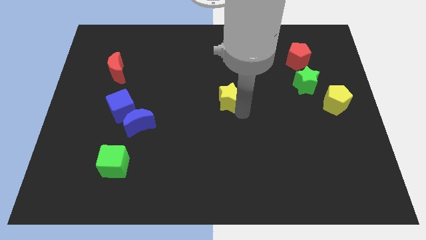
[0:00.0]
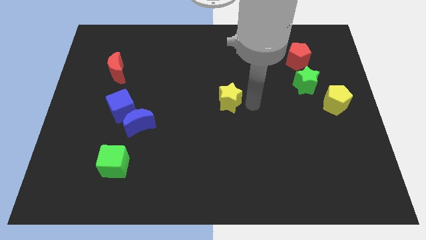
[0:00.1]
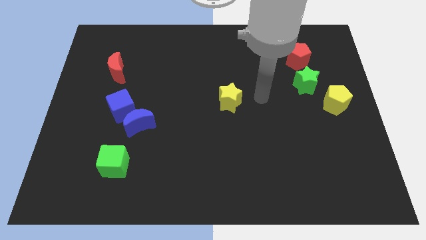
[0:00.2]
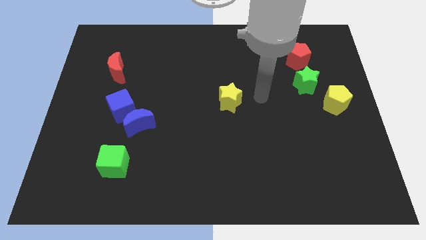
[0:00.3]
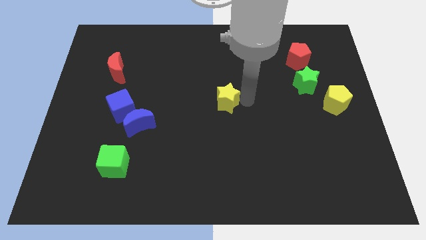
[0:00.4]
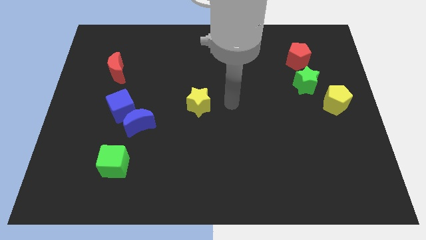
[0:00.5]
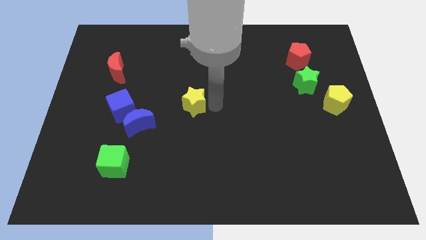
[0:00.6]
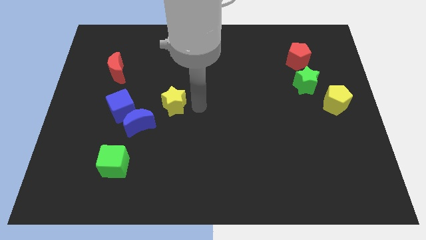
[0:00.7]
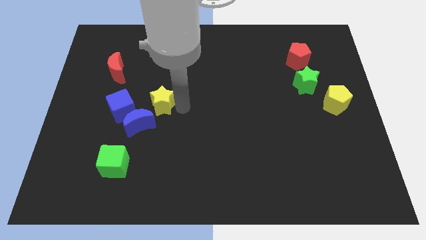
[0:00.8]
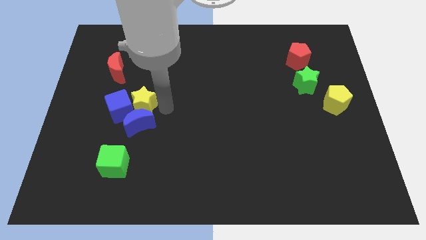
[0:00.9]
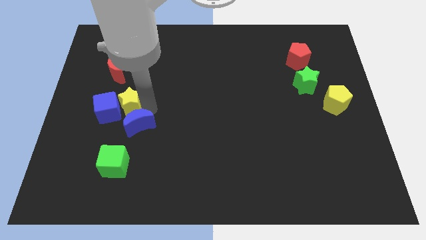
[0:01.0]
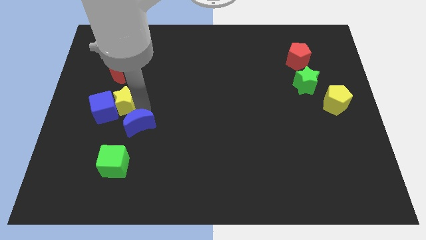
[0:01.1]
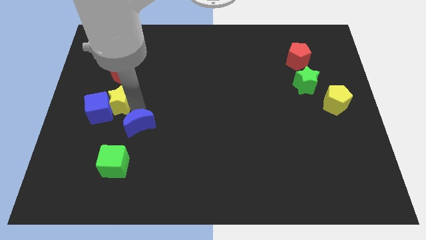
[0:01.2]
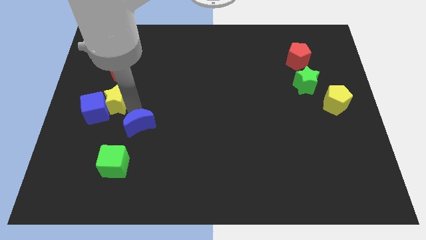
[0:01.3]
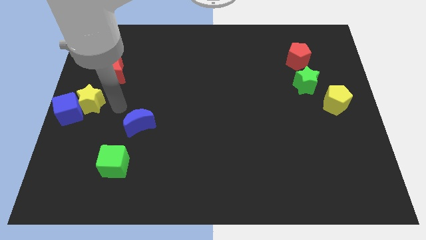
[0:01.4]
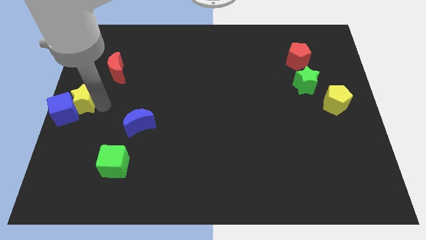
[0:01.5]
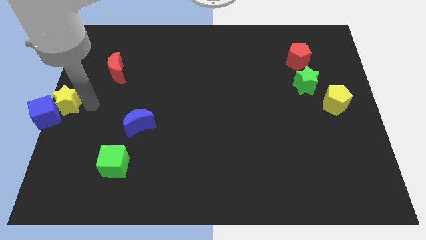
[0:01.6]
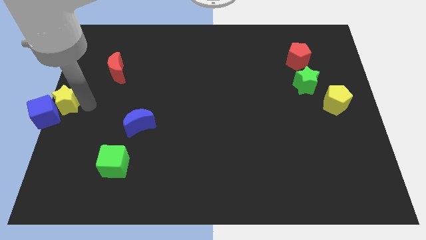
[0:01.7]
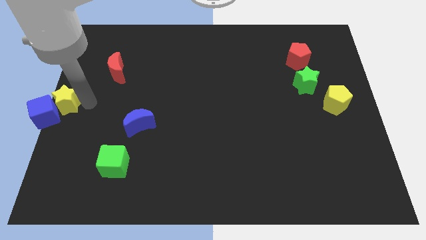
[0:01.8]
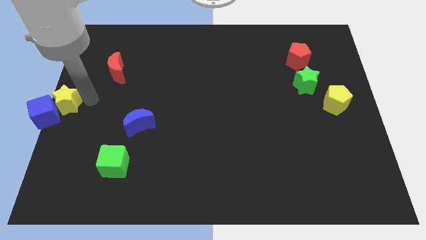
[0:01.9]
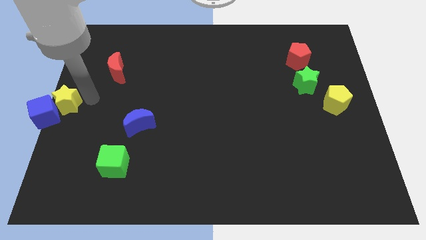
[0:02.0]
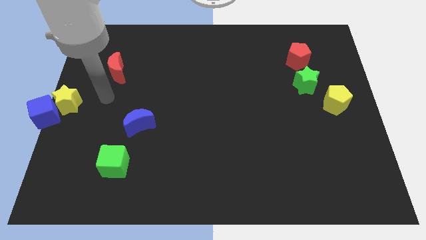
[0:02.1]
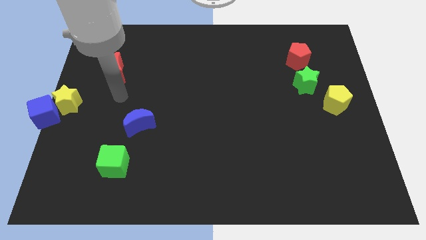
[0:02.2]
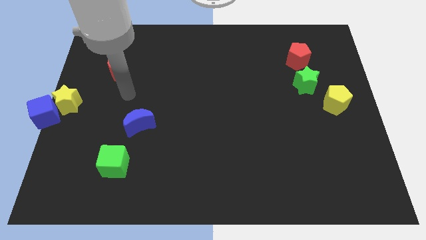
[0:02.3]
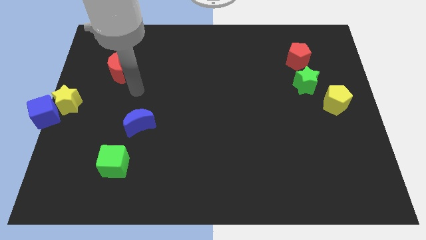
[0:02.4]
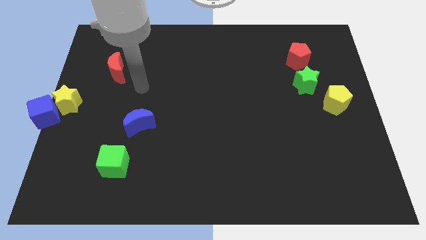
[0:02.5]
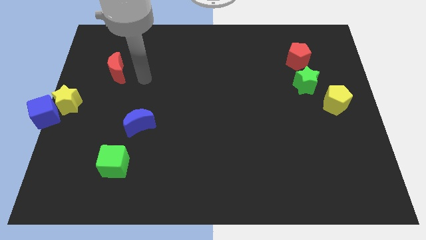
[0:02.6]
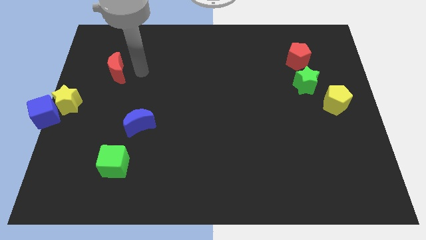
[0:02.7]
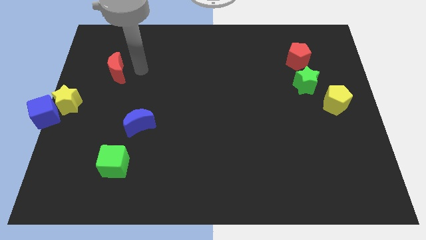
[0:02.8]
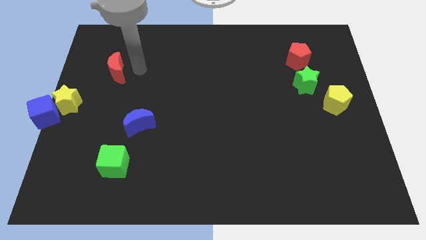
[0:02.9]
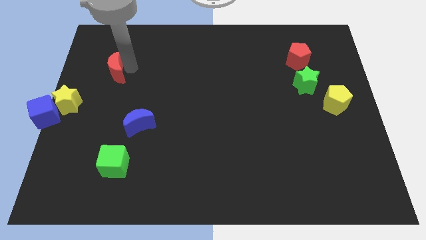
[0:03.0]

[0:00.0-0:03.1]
put the blue cube and yellow star at the center left side of the board

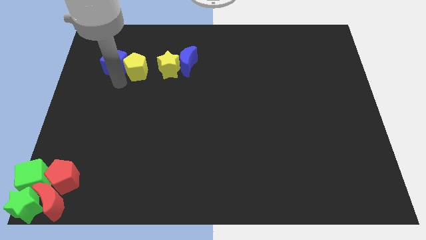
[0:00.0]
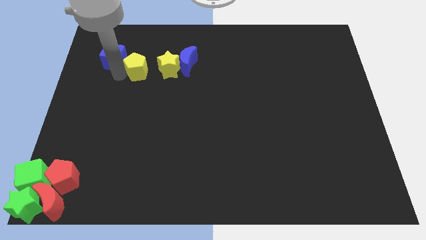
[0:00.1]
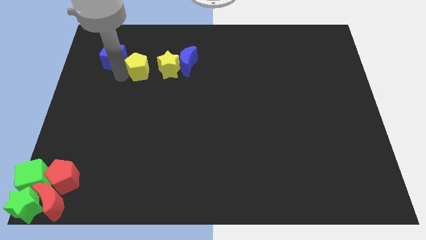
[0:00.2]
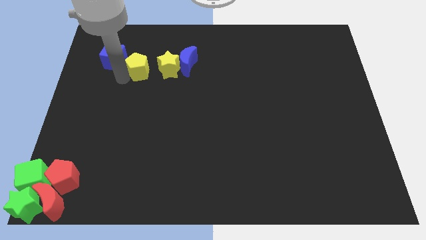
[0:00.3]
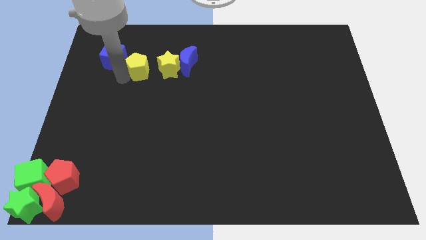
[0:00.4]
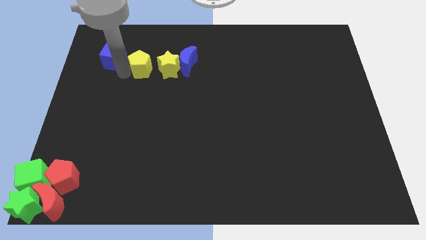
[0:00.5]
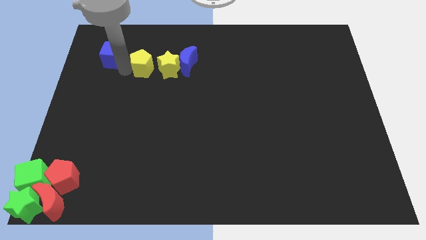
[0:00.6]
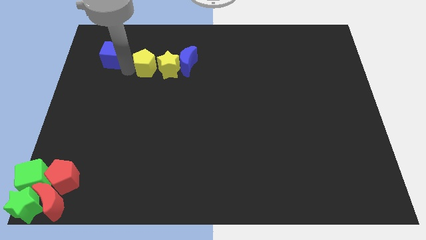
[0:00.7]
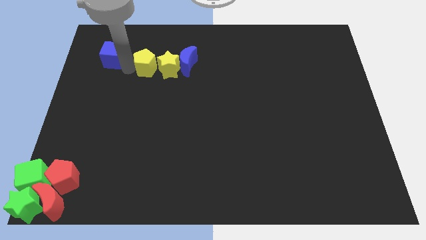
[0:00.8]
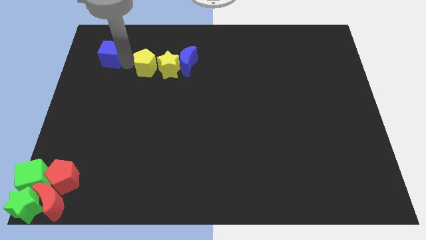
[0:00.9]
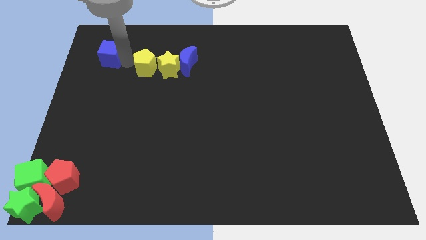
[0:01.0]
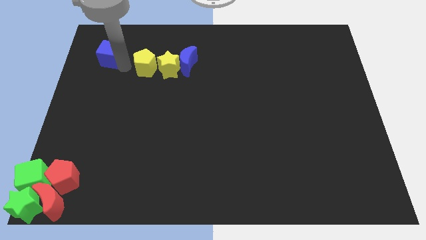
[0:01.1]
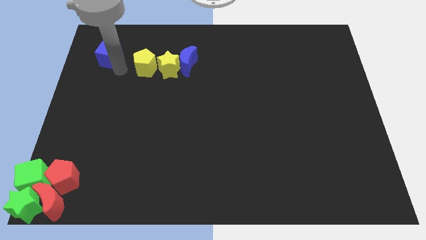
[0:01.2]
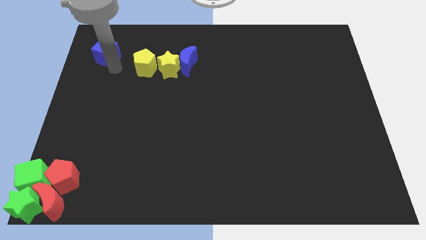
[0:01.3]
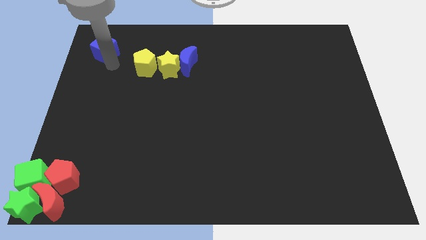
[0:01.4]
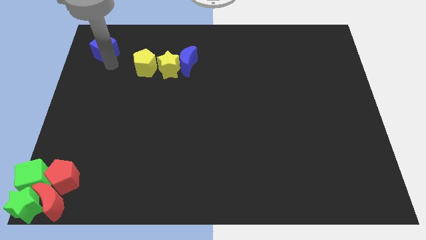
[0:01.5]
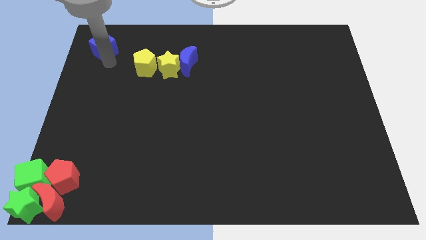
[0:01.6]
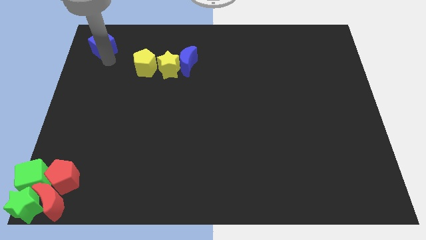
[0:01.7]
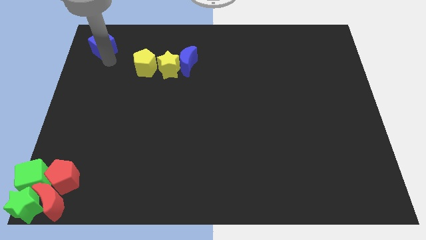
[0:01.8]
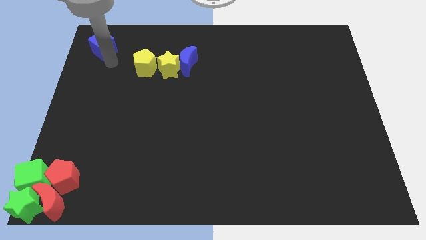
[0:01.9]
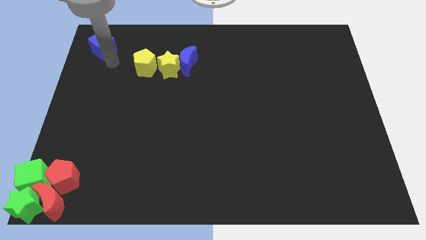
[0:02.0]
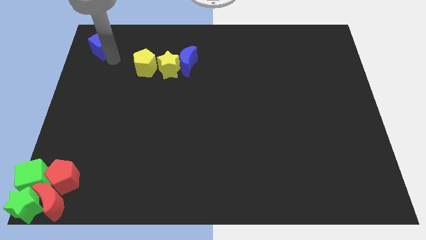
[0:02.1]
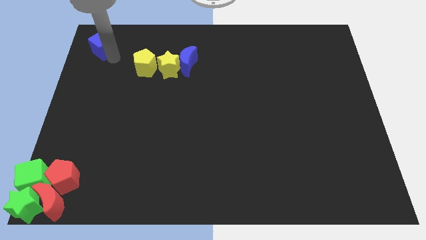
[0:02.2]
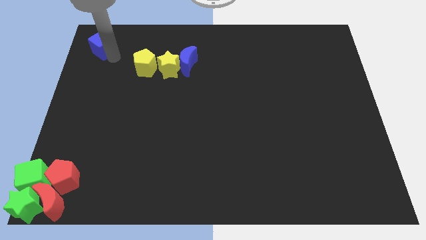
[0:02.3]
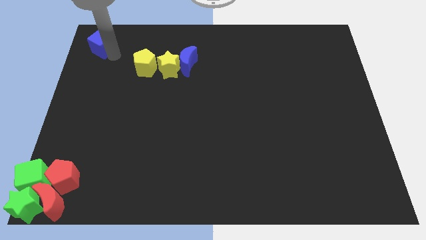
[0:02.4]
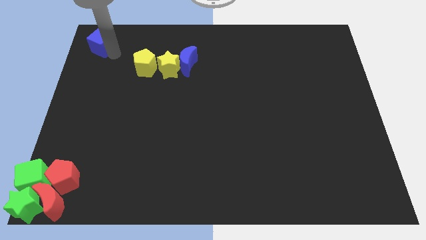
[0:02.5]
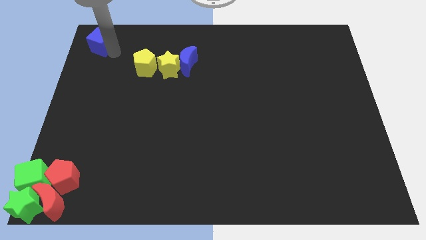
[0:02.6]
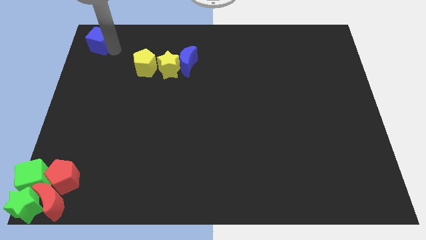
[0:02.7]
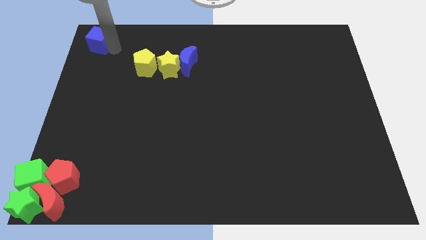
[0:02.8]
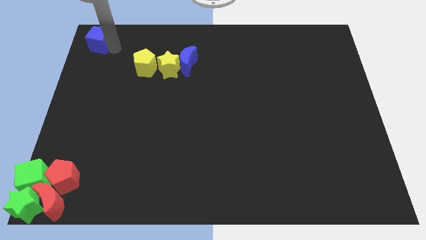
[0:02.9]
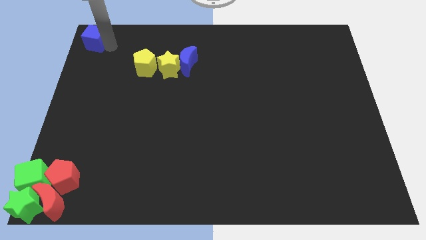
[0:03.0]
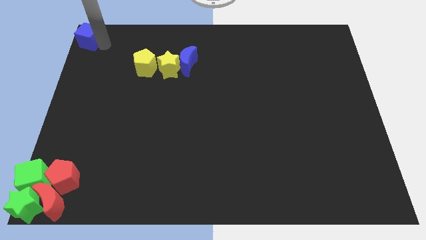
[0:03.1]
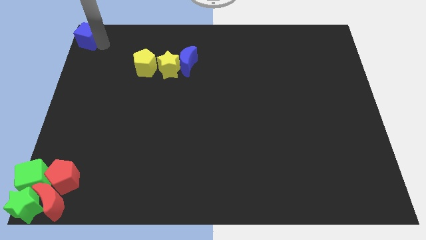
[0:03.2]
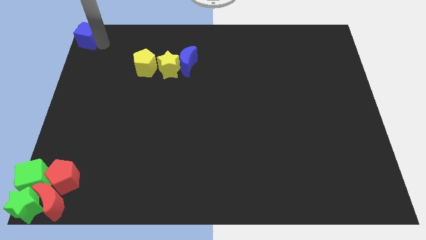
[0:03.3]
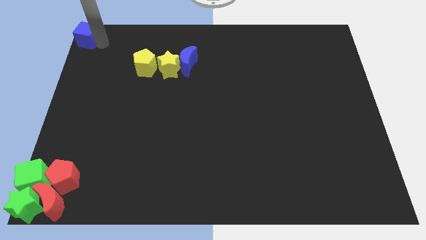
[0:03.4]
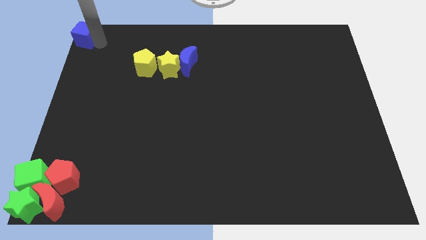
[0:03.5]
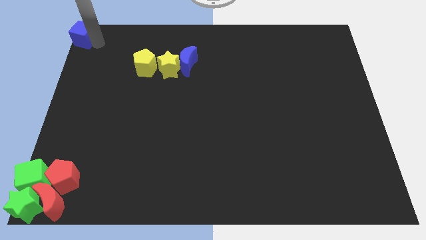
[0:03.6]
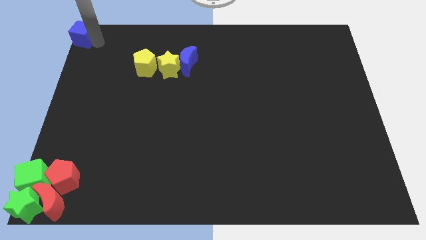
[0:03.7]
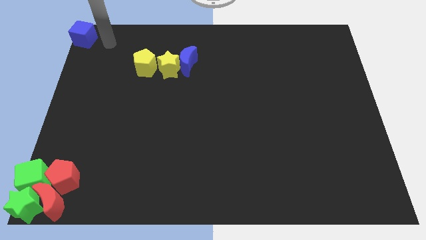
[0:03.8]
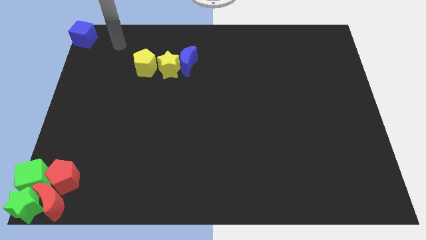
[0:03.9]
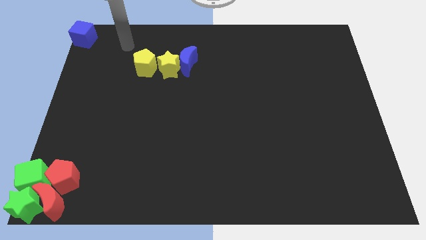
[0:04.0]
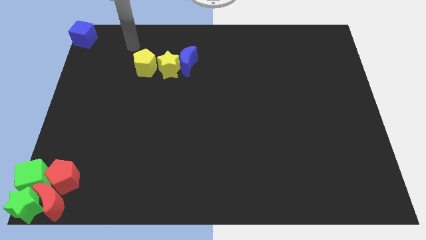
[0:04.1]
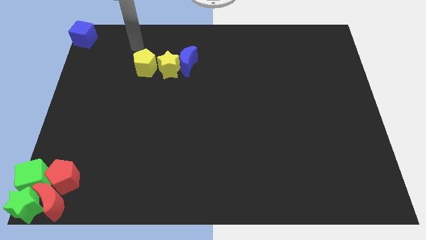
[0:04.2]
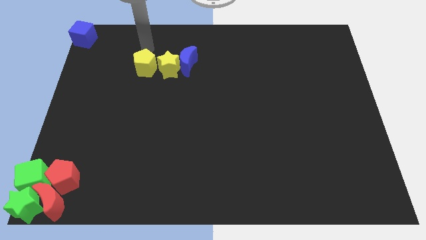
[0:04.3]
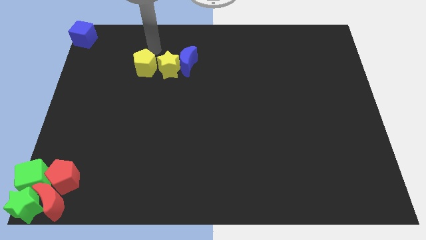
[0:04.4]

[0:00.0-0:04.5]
move the blue cube to the top left corner of the board

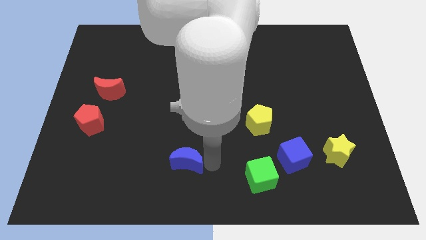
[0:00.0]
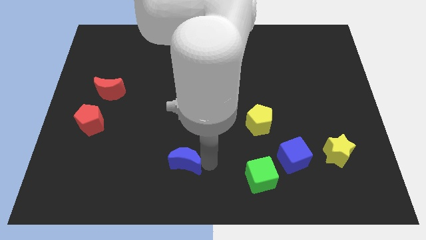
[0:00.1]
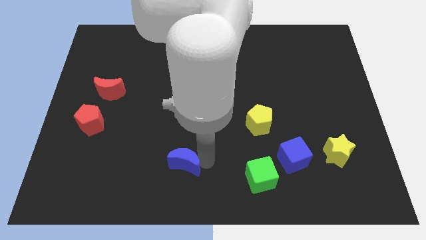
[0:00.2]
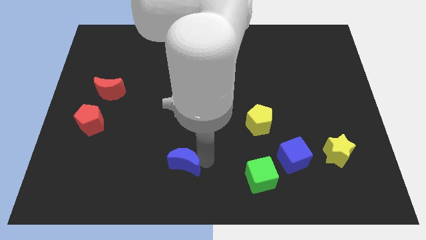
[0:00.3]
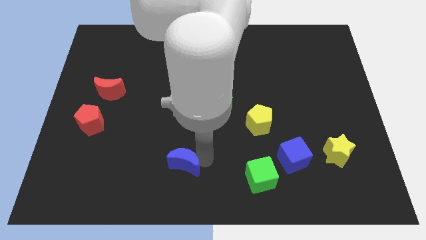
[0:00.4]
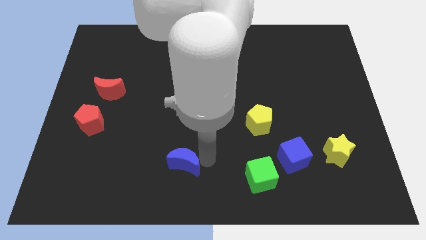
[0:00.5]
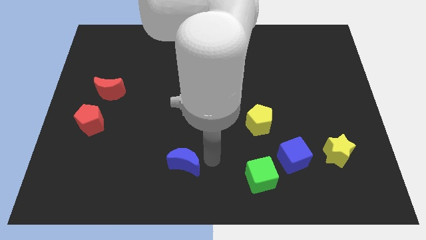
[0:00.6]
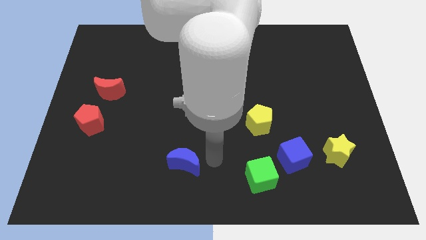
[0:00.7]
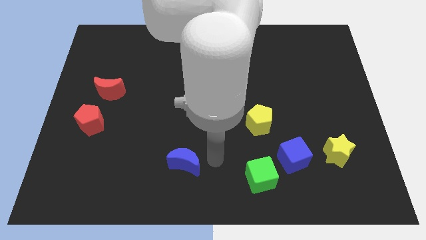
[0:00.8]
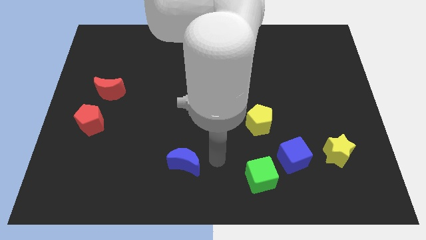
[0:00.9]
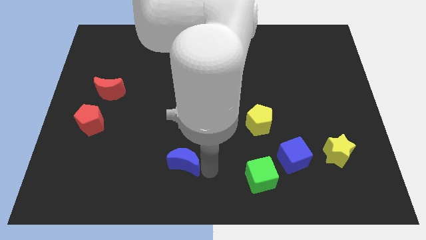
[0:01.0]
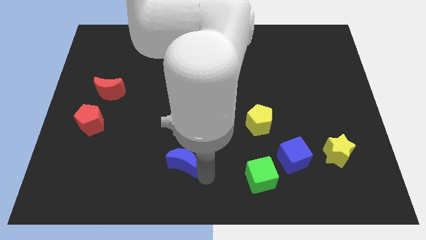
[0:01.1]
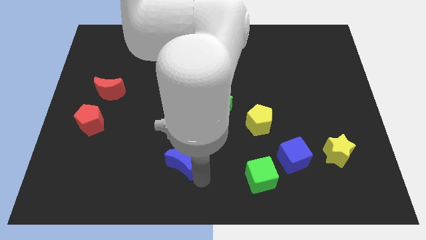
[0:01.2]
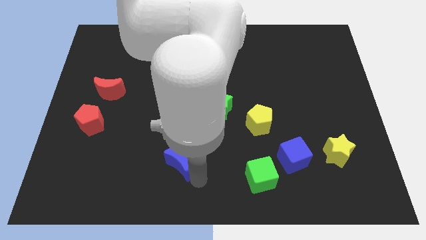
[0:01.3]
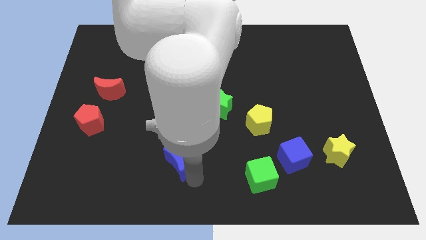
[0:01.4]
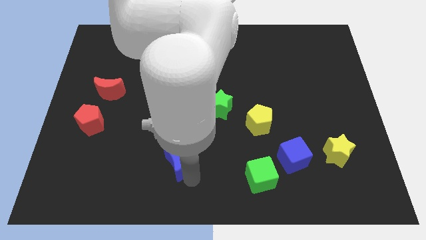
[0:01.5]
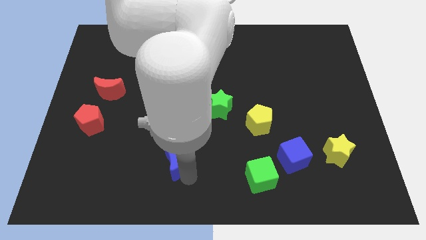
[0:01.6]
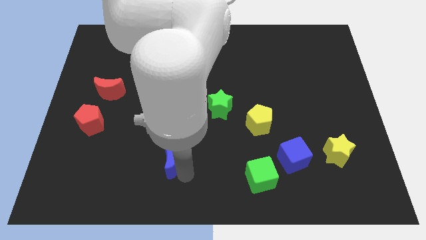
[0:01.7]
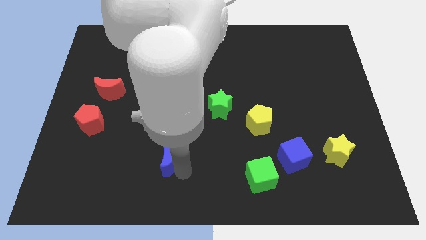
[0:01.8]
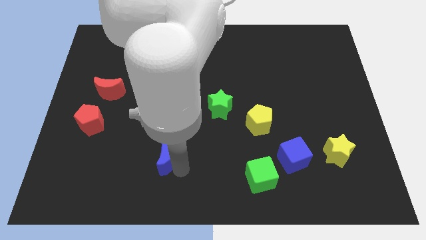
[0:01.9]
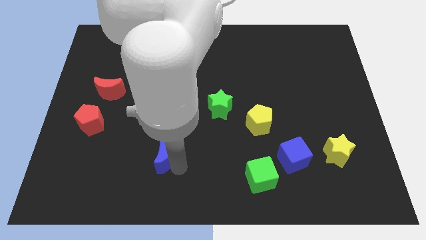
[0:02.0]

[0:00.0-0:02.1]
push the blue crescent slightly to the left
